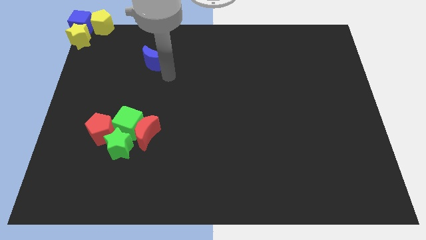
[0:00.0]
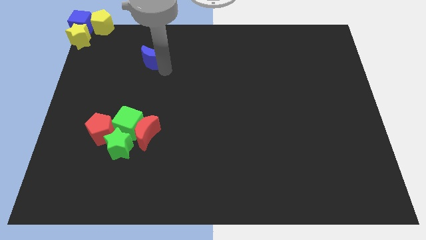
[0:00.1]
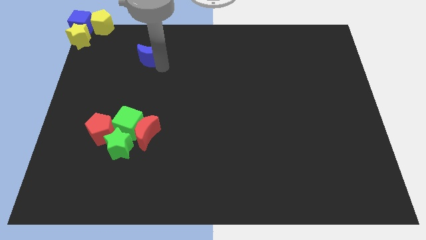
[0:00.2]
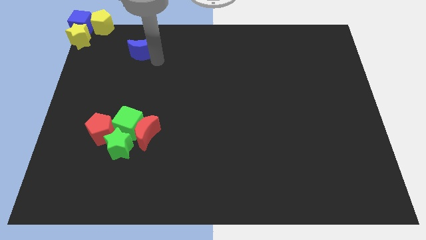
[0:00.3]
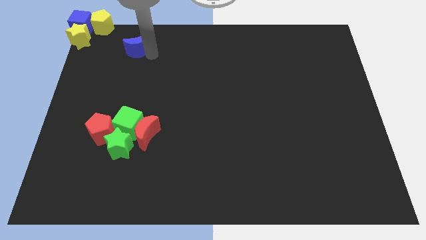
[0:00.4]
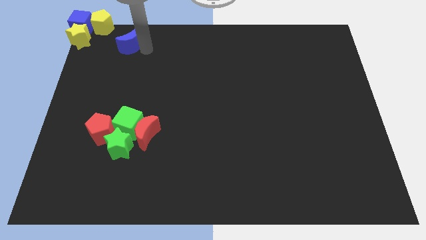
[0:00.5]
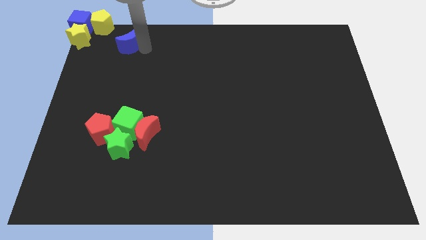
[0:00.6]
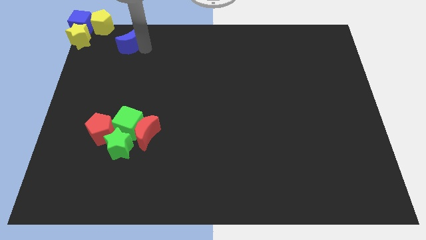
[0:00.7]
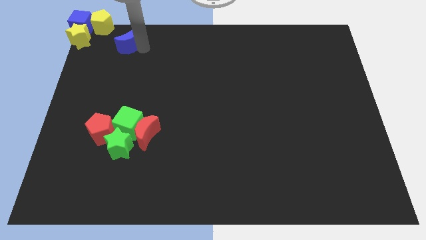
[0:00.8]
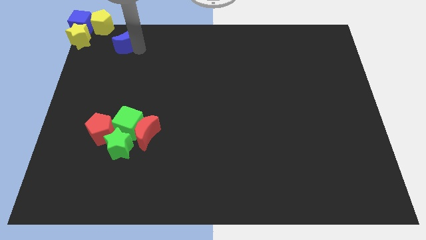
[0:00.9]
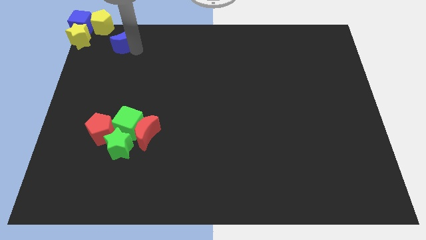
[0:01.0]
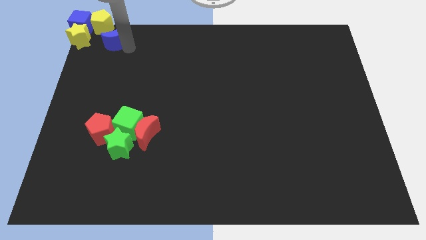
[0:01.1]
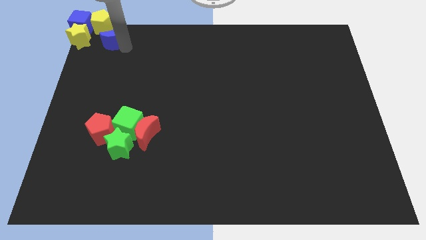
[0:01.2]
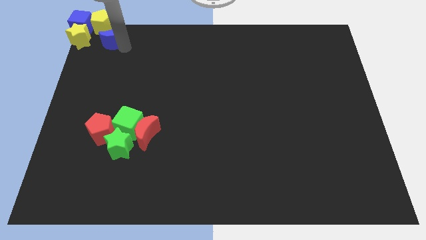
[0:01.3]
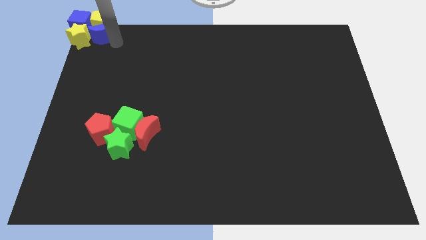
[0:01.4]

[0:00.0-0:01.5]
push the blue crescent towards the yellow pentagon

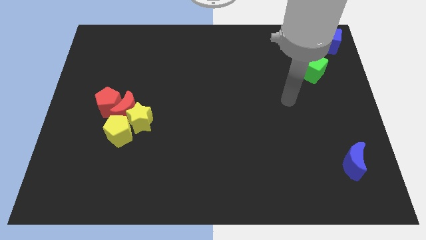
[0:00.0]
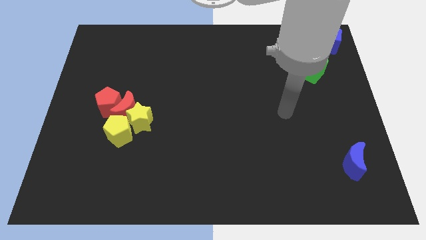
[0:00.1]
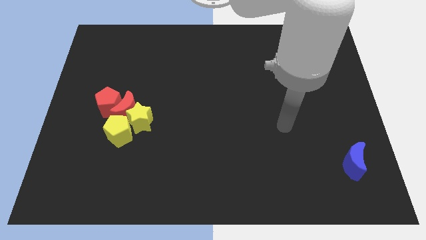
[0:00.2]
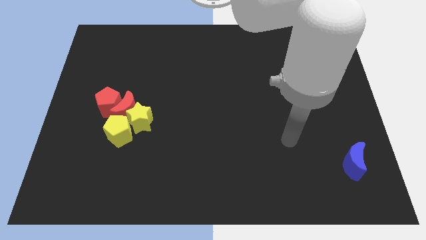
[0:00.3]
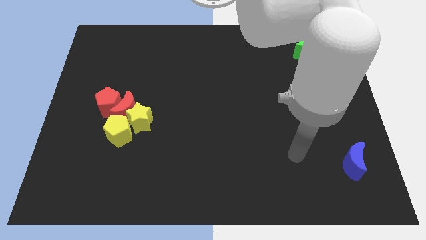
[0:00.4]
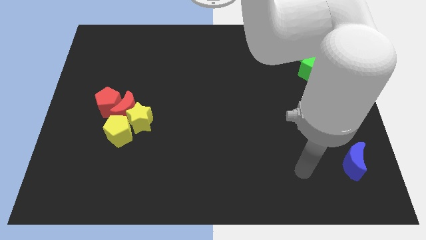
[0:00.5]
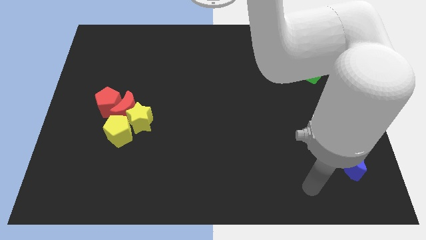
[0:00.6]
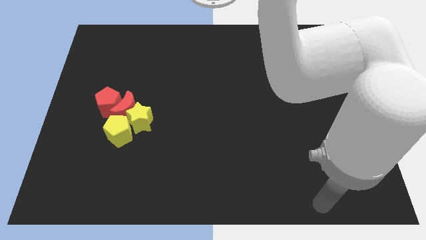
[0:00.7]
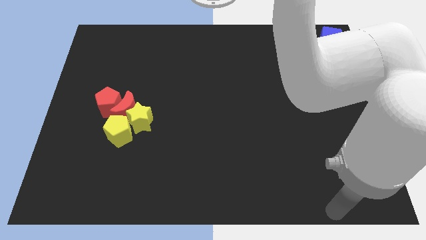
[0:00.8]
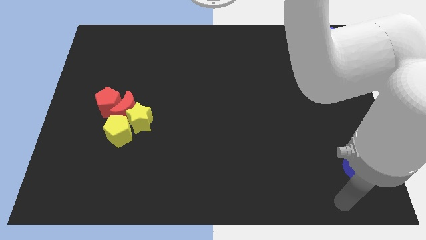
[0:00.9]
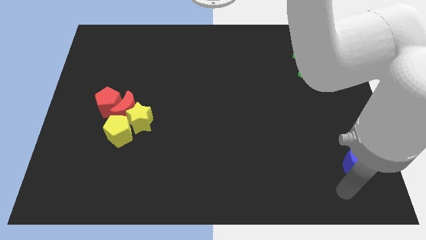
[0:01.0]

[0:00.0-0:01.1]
move your arm to the bottom of the blue moon

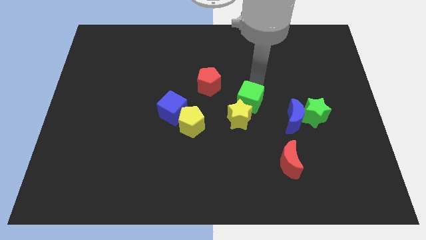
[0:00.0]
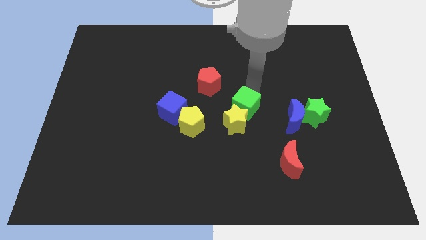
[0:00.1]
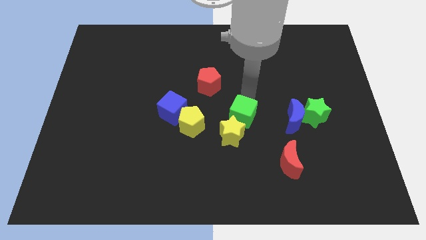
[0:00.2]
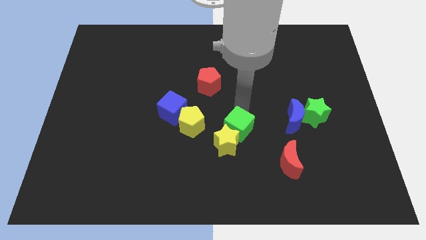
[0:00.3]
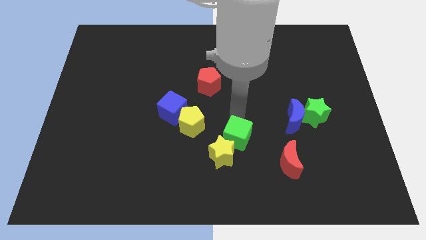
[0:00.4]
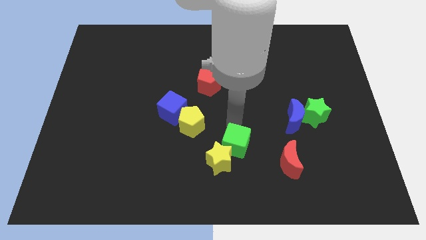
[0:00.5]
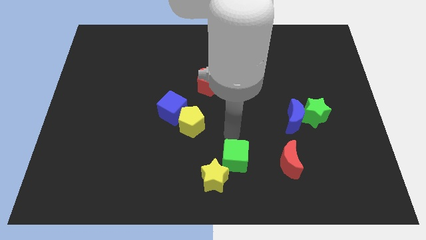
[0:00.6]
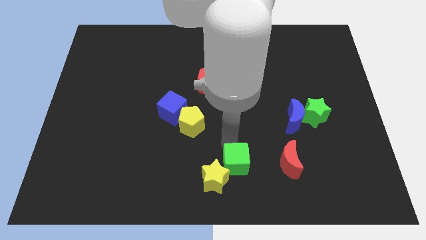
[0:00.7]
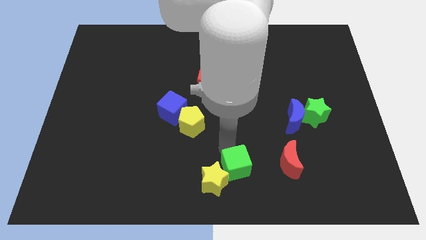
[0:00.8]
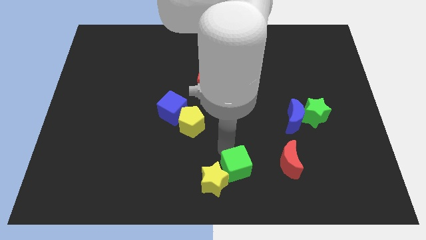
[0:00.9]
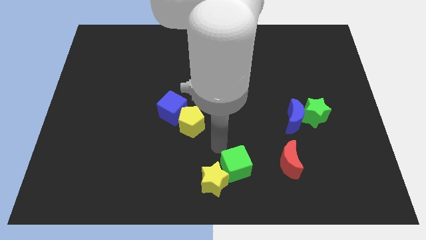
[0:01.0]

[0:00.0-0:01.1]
push the green cube towards the bottom center of the board

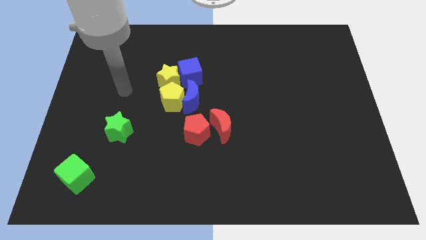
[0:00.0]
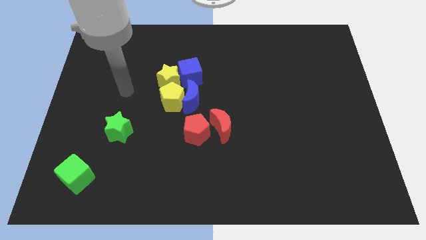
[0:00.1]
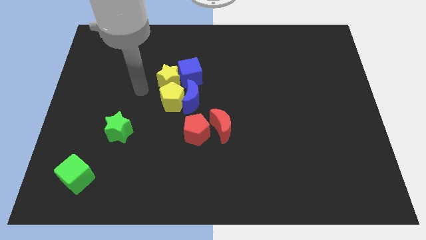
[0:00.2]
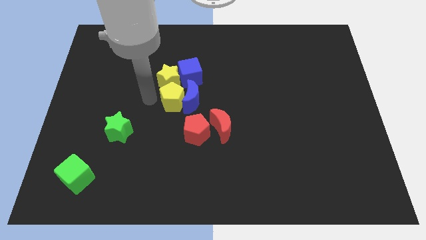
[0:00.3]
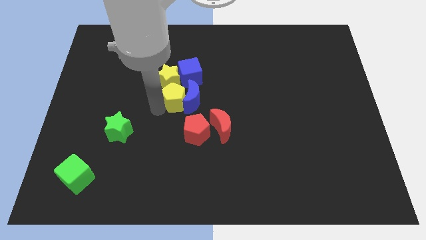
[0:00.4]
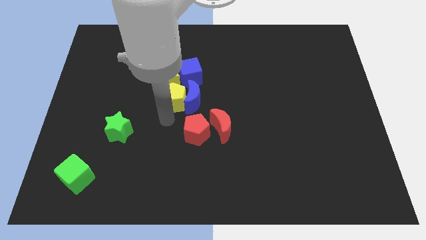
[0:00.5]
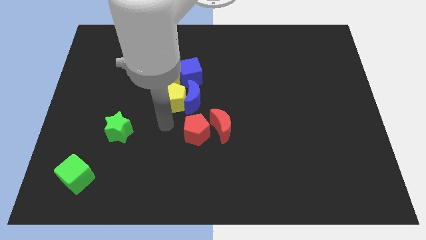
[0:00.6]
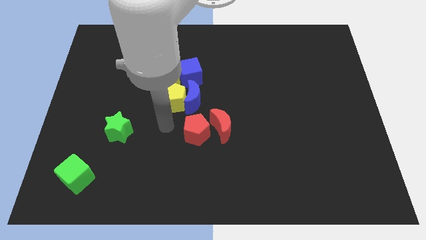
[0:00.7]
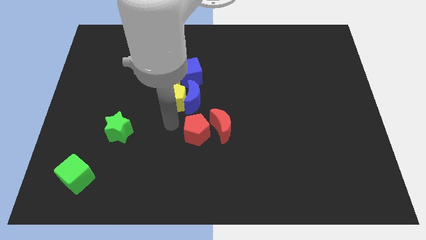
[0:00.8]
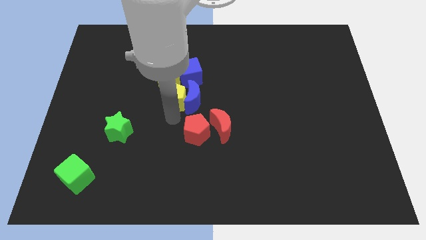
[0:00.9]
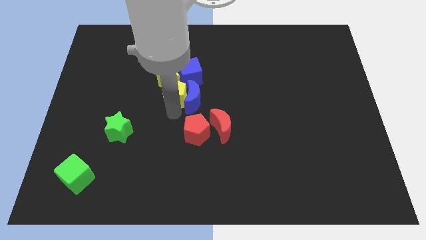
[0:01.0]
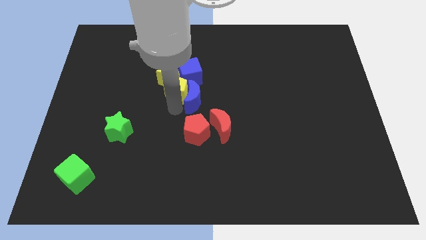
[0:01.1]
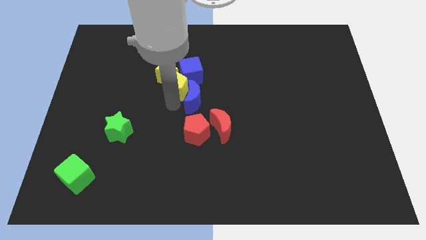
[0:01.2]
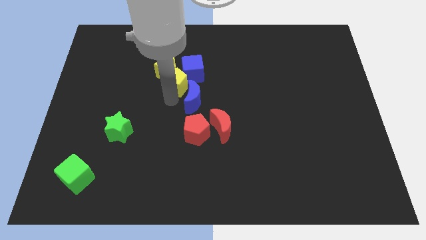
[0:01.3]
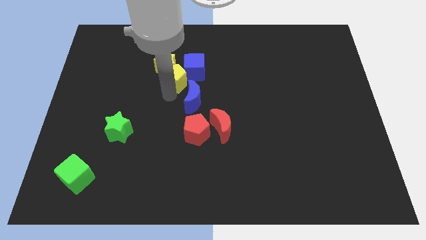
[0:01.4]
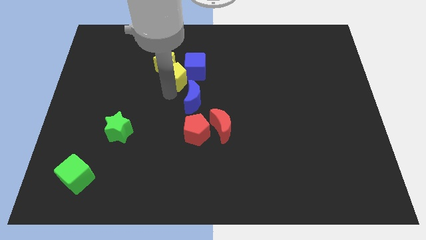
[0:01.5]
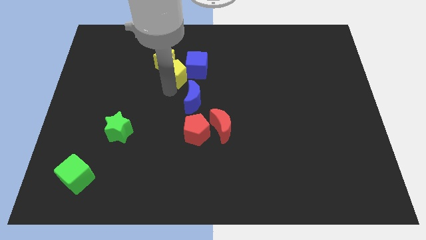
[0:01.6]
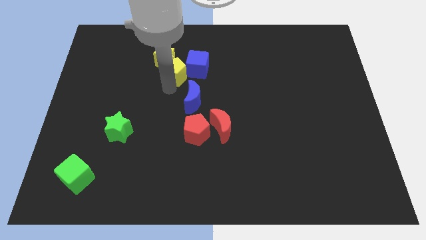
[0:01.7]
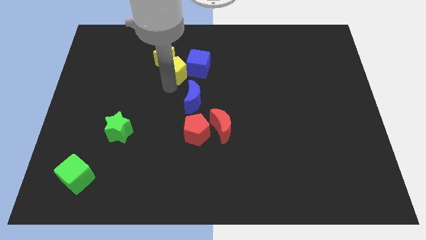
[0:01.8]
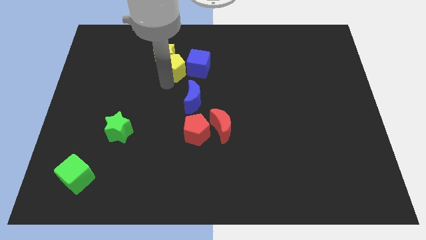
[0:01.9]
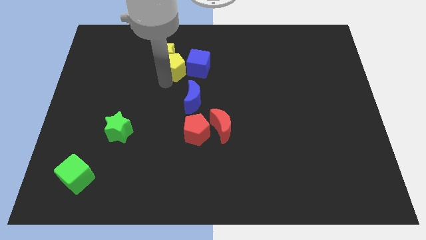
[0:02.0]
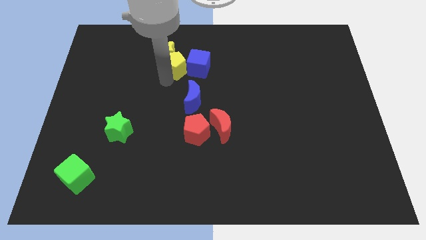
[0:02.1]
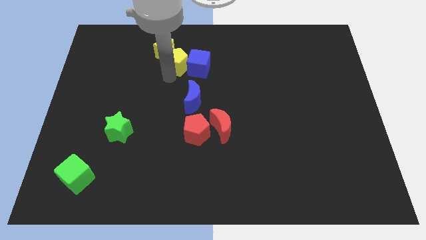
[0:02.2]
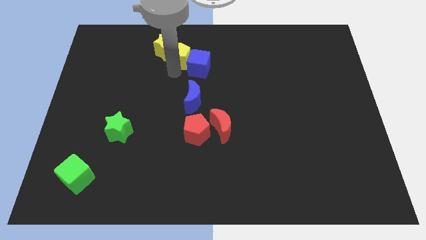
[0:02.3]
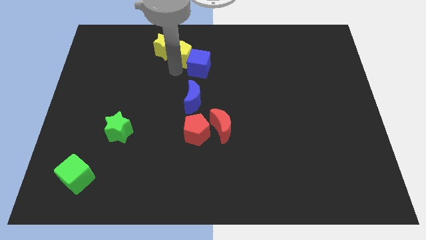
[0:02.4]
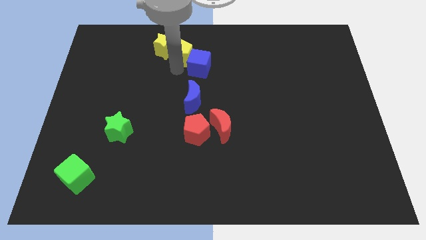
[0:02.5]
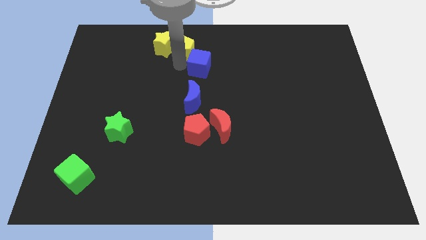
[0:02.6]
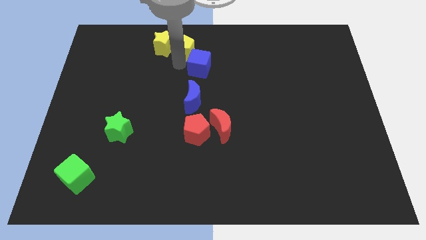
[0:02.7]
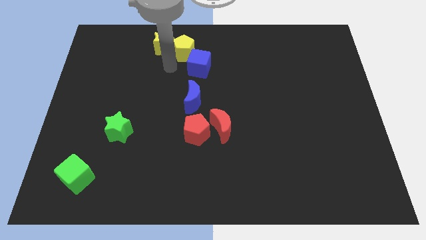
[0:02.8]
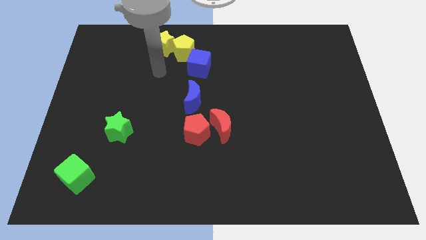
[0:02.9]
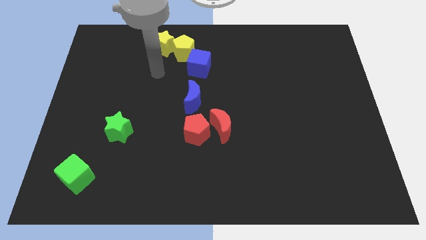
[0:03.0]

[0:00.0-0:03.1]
push the yellow pentagon to the top center

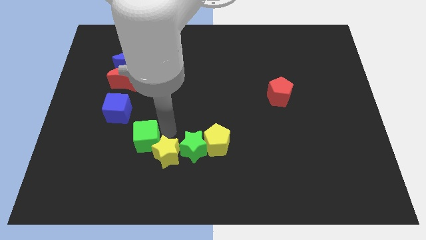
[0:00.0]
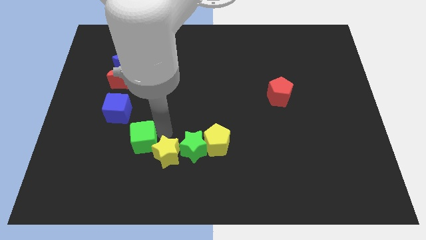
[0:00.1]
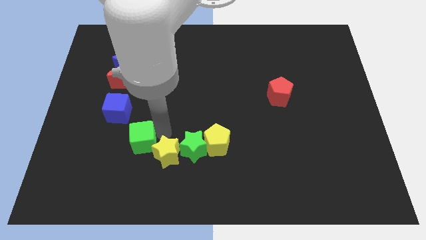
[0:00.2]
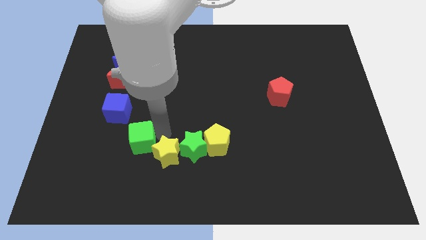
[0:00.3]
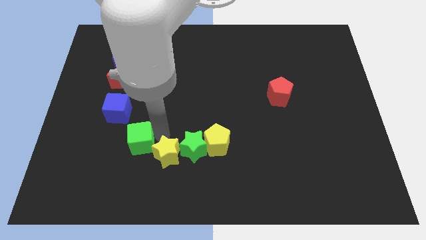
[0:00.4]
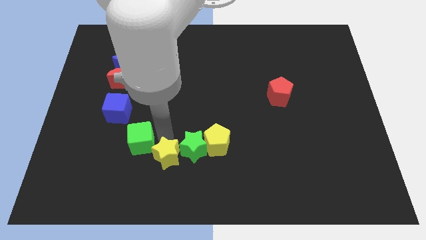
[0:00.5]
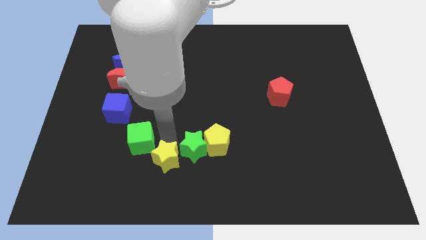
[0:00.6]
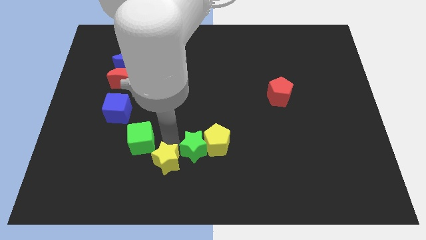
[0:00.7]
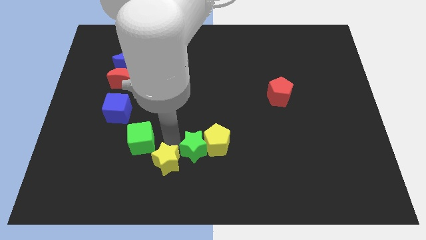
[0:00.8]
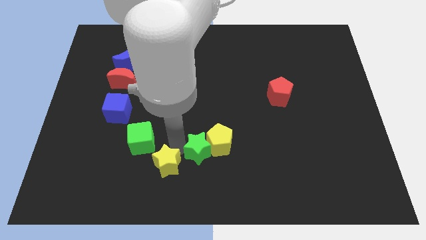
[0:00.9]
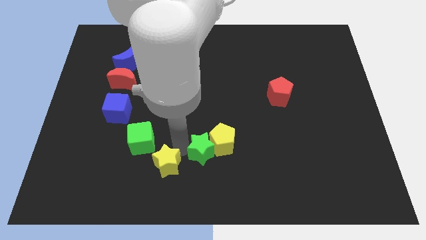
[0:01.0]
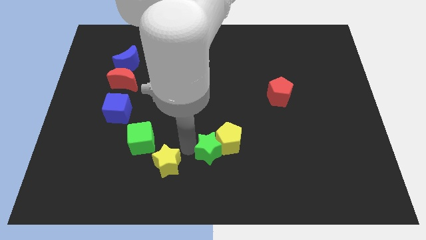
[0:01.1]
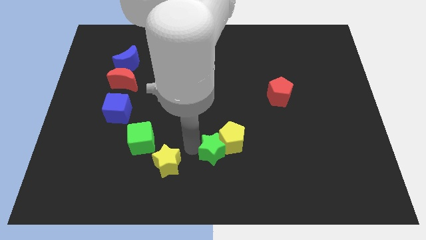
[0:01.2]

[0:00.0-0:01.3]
separate green and the yellow stars

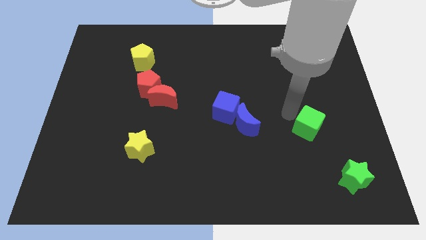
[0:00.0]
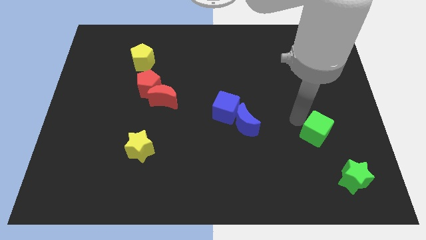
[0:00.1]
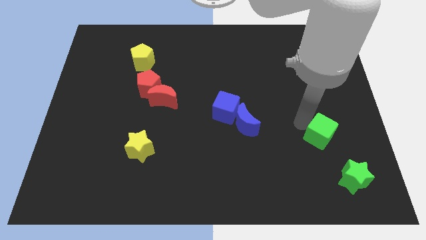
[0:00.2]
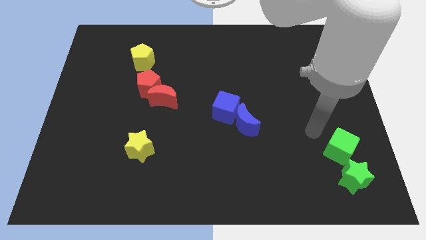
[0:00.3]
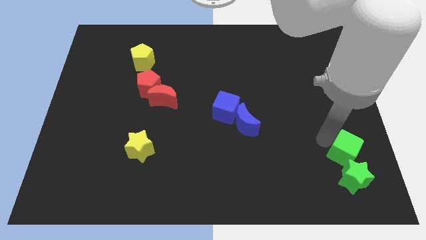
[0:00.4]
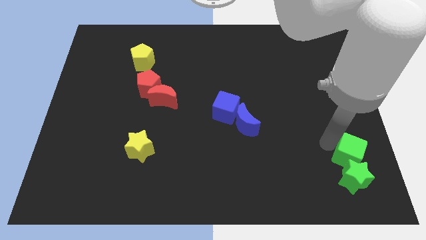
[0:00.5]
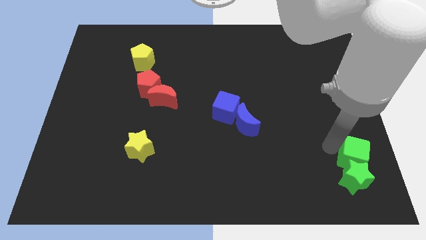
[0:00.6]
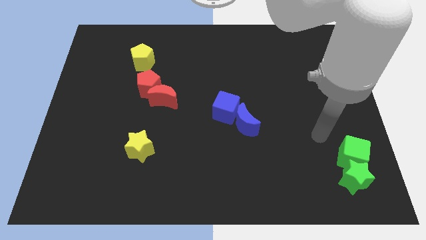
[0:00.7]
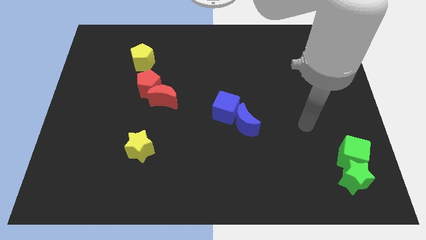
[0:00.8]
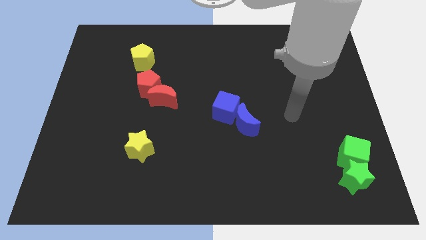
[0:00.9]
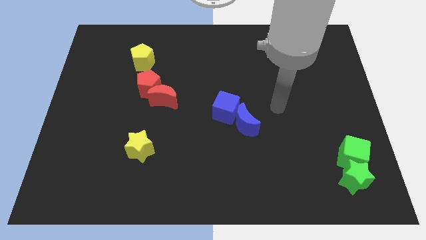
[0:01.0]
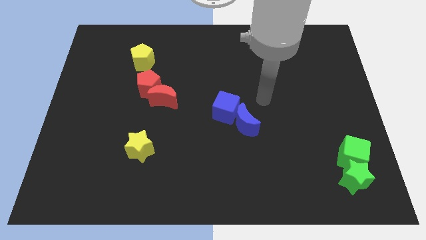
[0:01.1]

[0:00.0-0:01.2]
place the green cube above the green star
